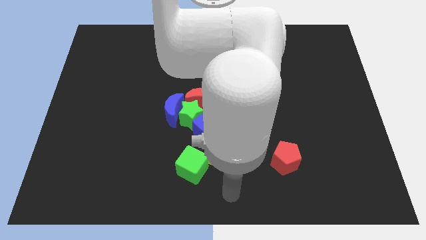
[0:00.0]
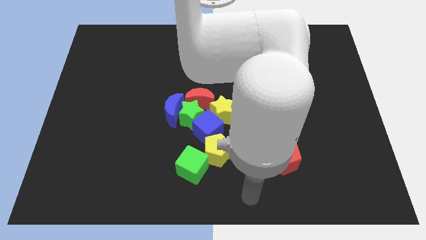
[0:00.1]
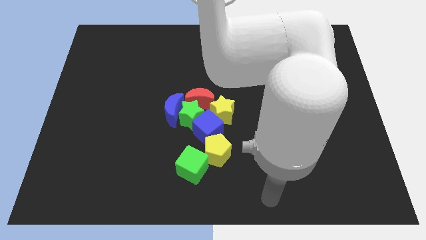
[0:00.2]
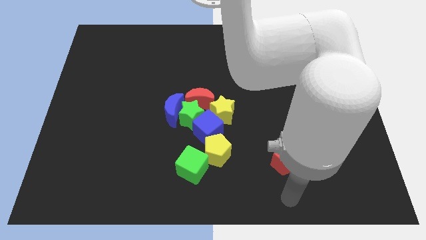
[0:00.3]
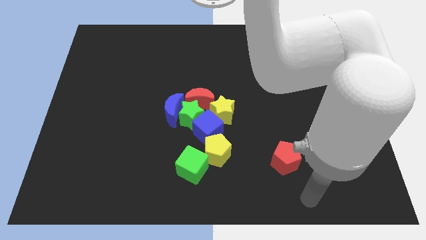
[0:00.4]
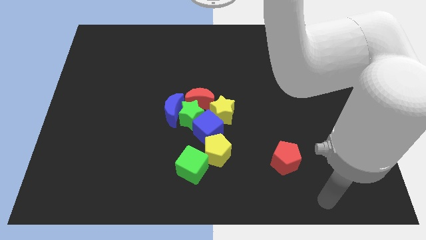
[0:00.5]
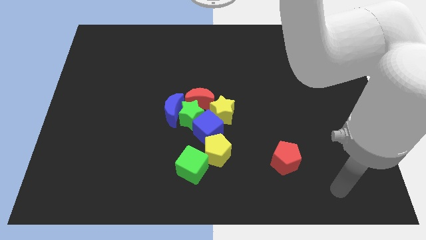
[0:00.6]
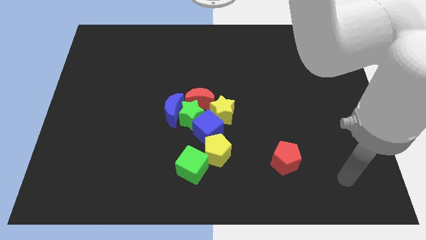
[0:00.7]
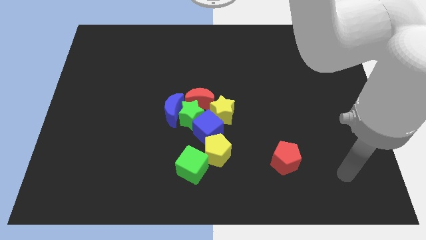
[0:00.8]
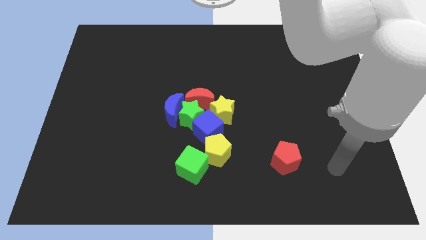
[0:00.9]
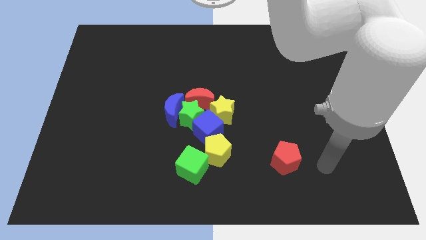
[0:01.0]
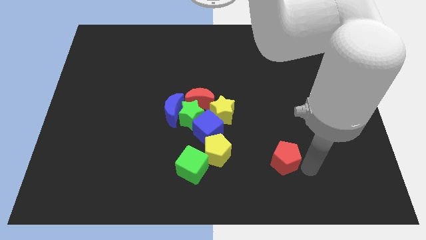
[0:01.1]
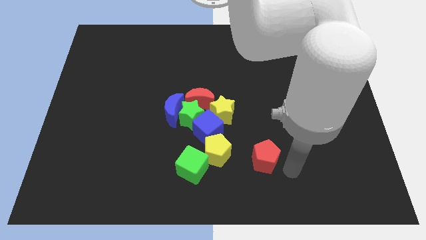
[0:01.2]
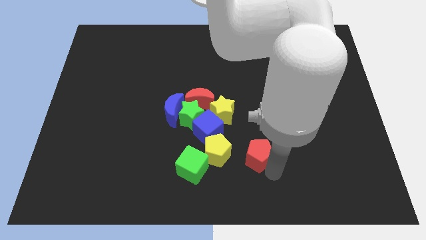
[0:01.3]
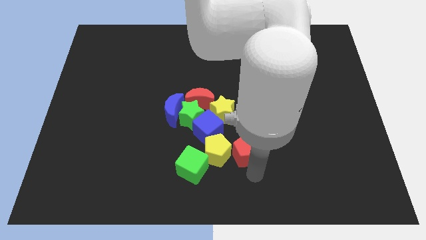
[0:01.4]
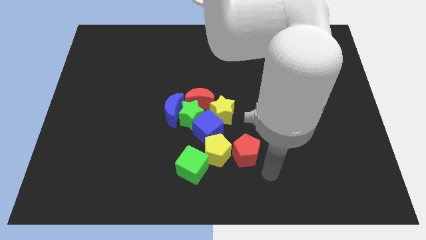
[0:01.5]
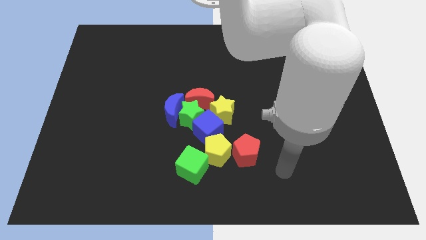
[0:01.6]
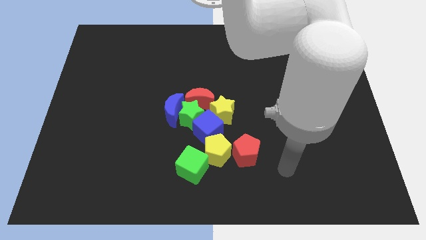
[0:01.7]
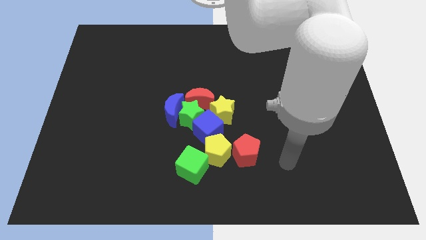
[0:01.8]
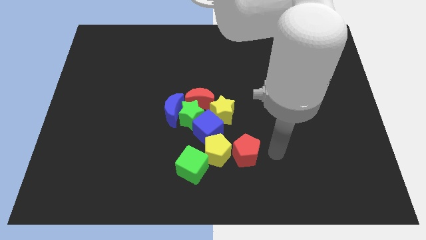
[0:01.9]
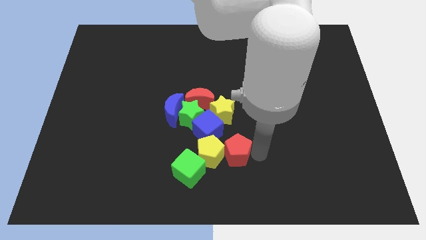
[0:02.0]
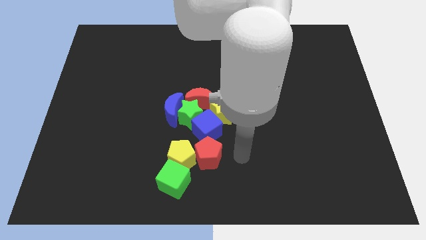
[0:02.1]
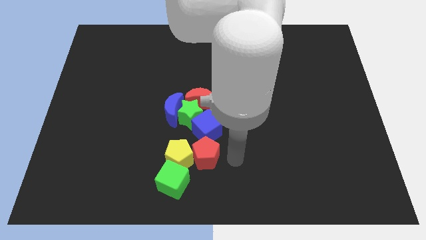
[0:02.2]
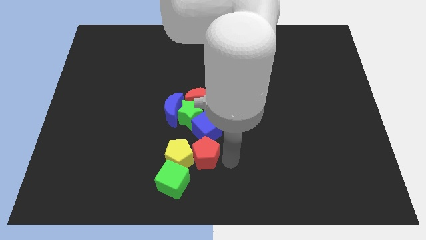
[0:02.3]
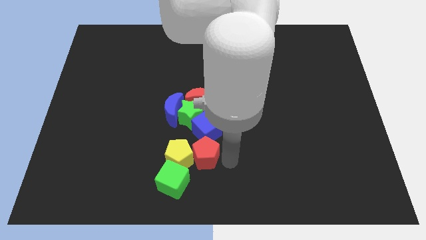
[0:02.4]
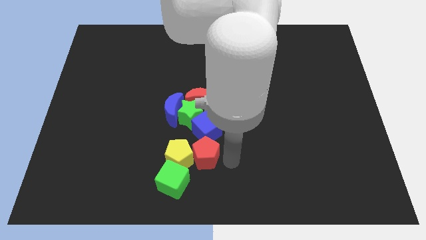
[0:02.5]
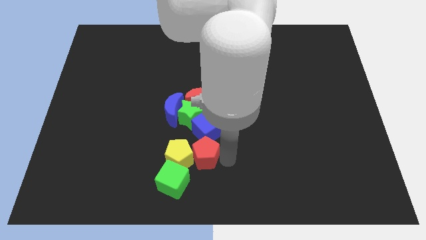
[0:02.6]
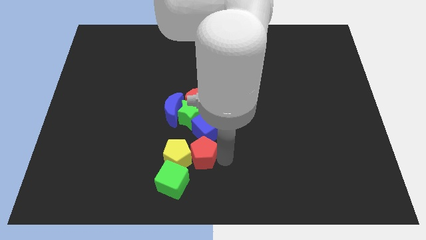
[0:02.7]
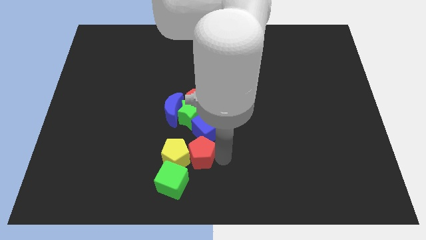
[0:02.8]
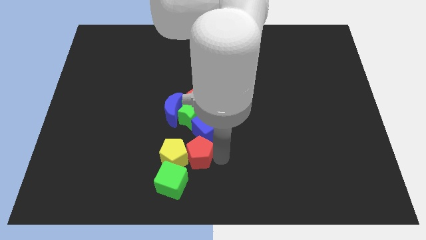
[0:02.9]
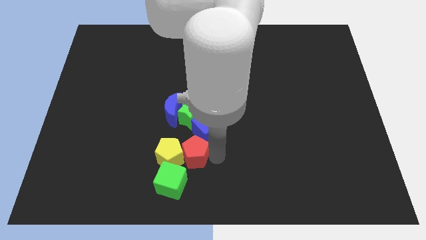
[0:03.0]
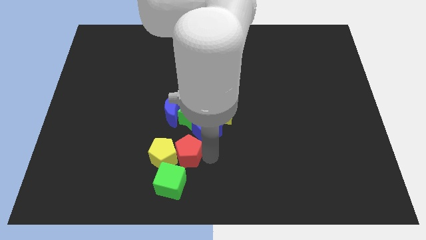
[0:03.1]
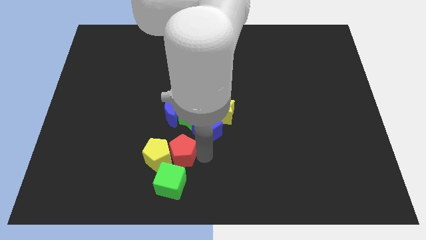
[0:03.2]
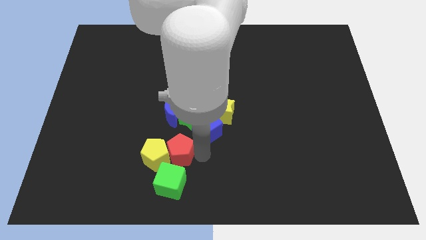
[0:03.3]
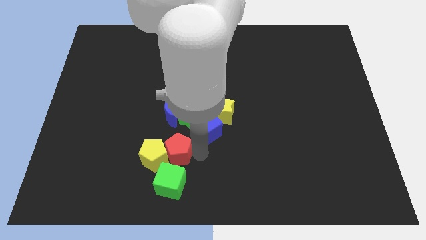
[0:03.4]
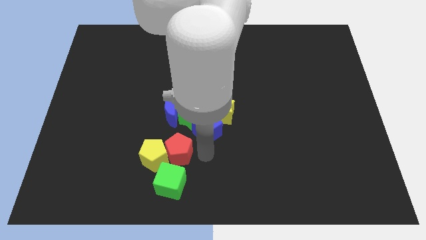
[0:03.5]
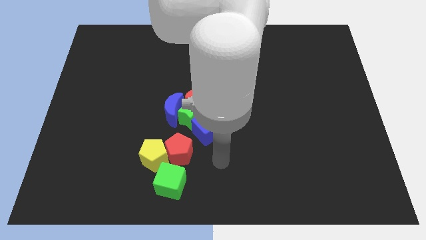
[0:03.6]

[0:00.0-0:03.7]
push the red pentagon into the yellow pentagon

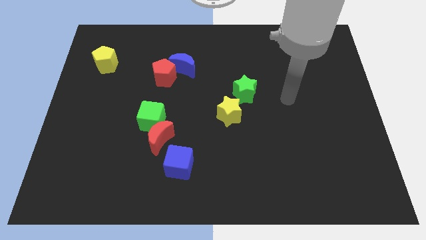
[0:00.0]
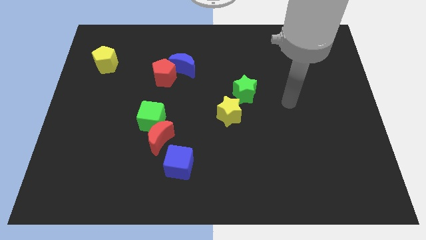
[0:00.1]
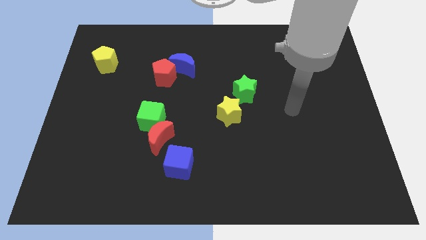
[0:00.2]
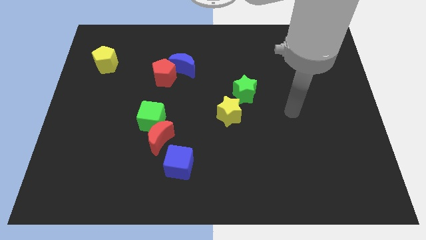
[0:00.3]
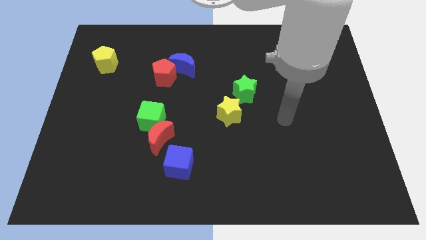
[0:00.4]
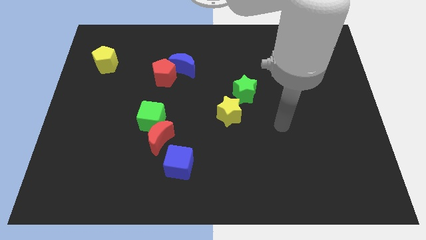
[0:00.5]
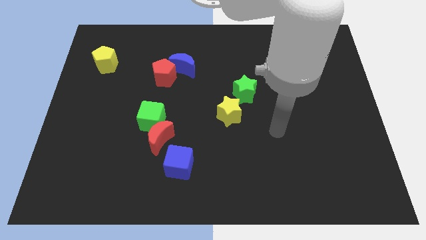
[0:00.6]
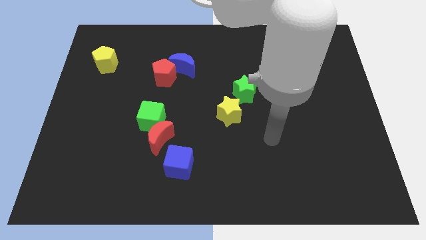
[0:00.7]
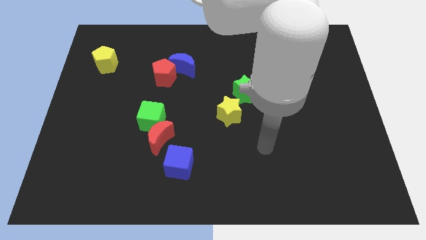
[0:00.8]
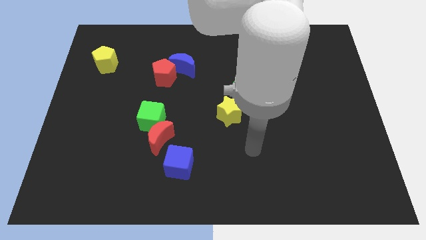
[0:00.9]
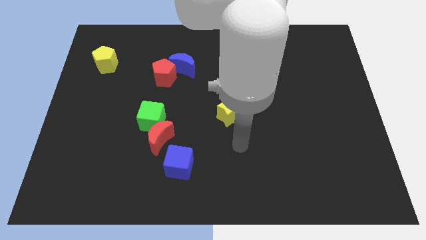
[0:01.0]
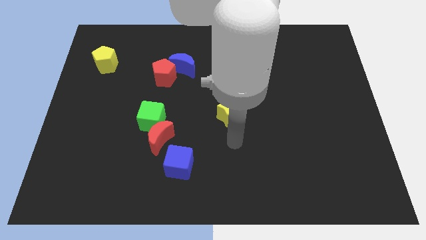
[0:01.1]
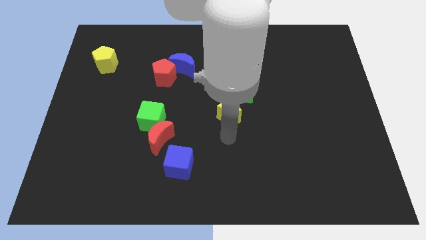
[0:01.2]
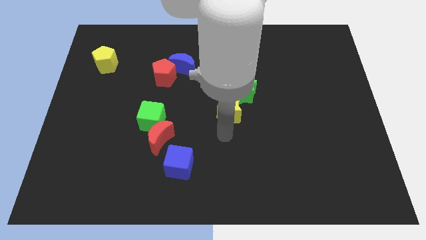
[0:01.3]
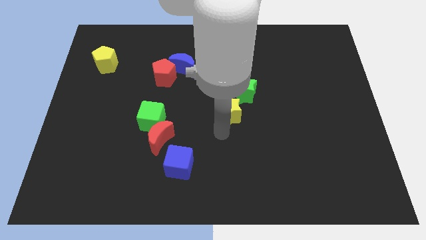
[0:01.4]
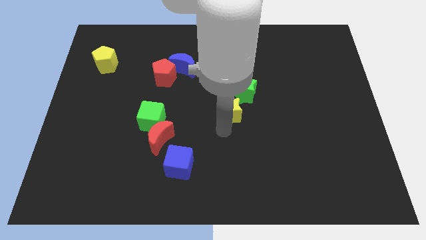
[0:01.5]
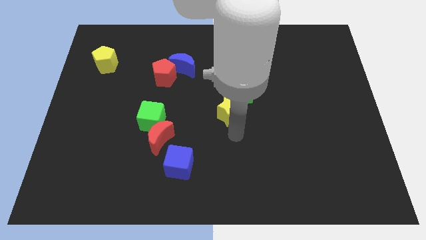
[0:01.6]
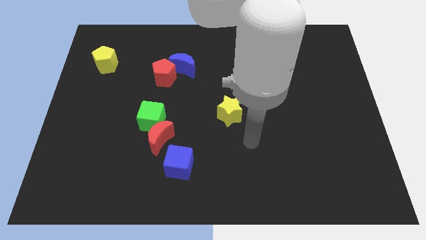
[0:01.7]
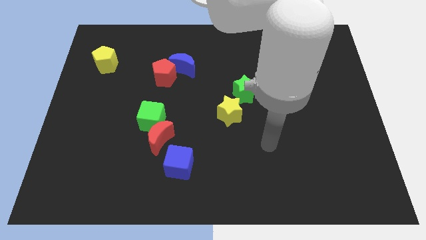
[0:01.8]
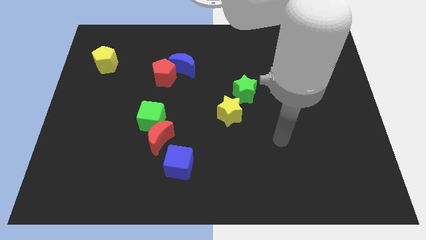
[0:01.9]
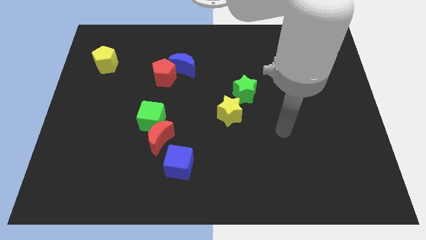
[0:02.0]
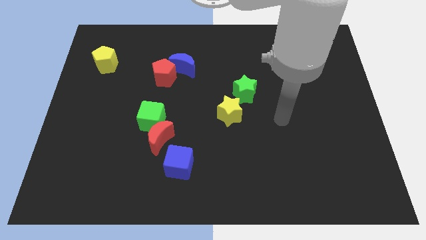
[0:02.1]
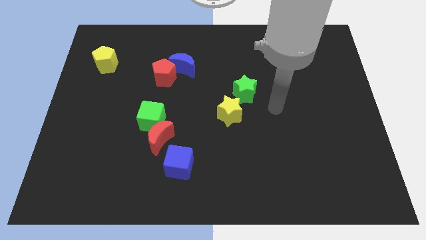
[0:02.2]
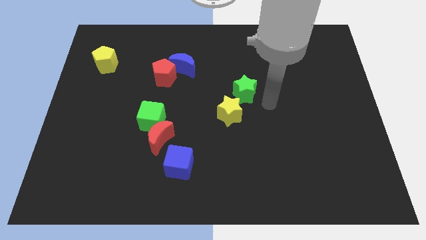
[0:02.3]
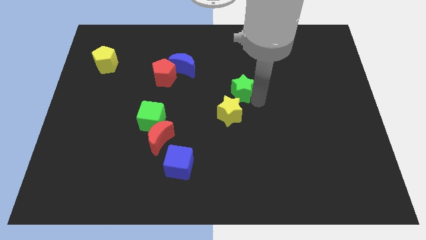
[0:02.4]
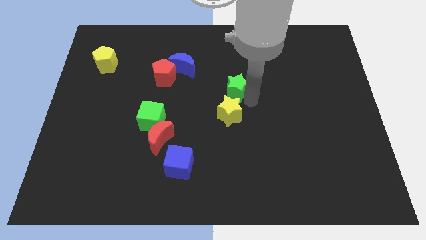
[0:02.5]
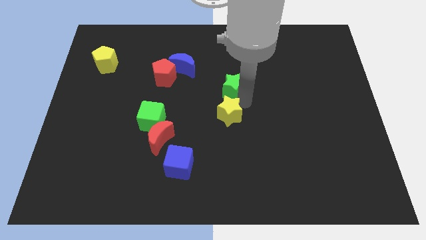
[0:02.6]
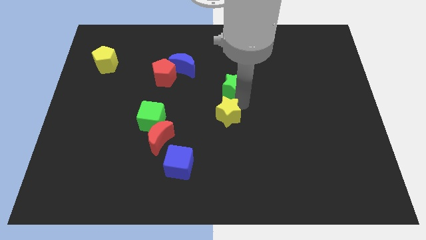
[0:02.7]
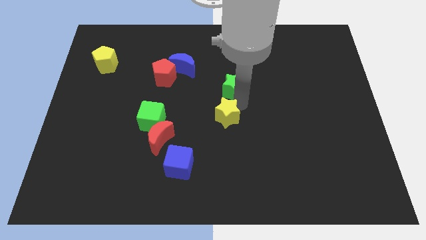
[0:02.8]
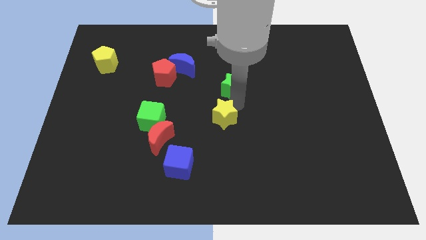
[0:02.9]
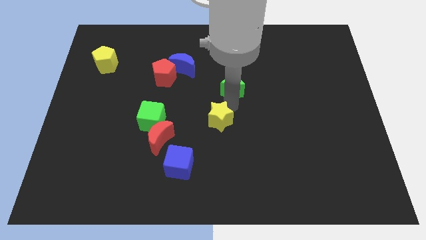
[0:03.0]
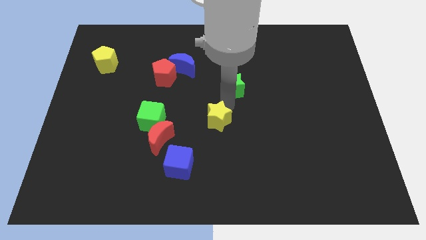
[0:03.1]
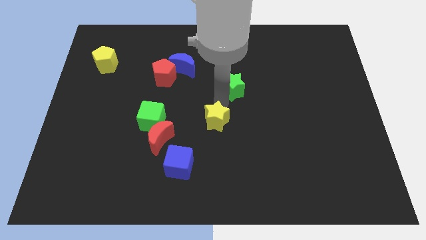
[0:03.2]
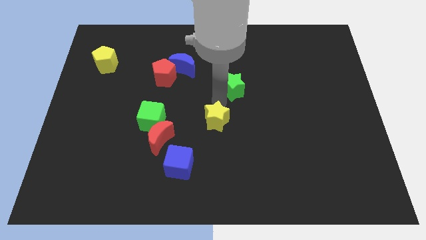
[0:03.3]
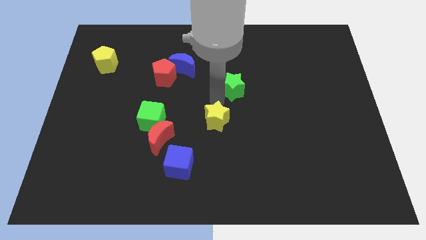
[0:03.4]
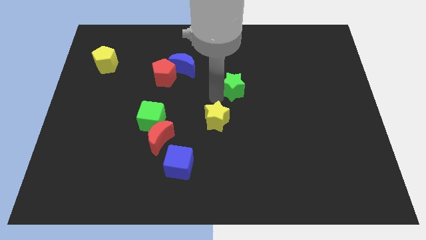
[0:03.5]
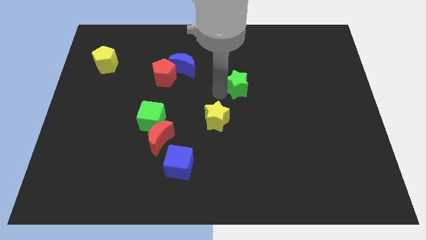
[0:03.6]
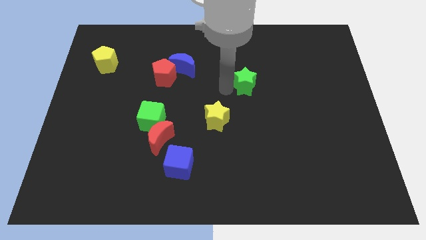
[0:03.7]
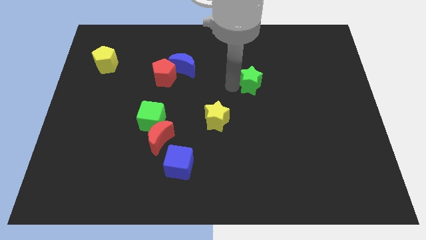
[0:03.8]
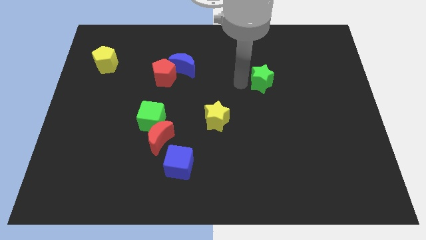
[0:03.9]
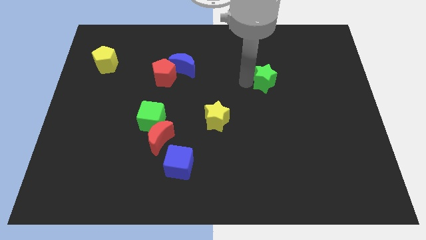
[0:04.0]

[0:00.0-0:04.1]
separate the yellow star and green star

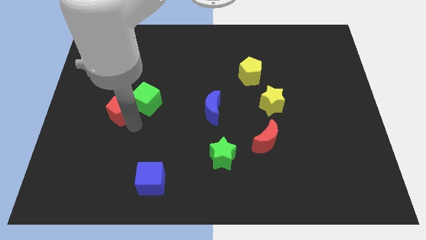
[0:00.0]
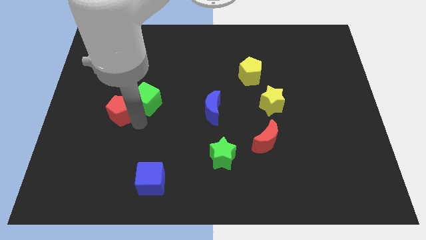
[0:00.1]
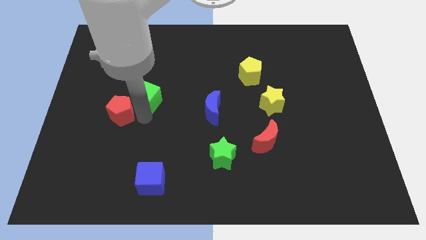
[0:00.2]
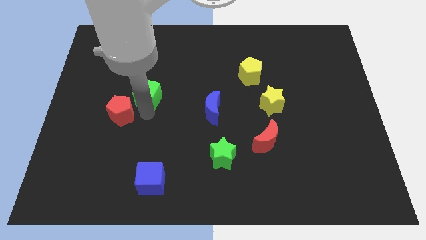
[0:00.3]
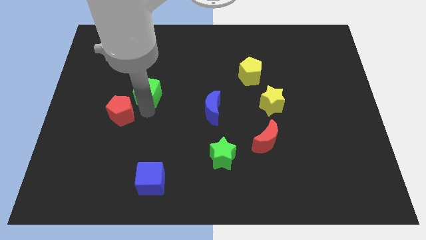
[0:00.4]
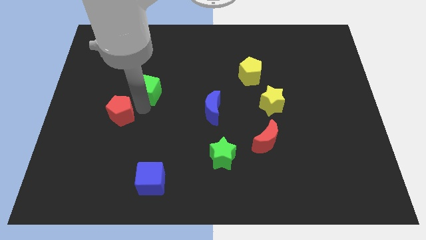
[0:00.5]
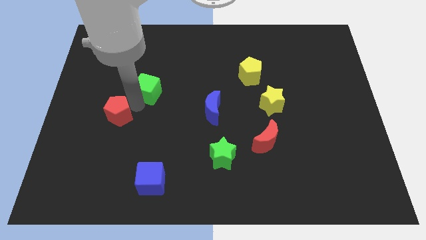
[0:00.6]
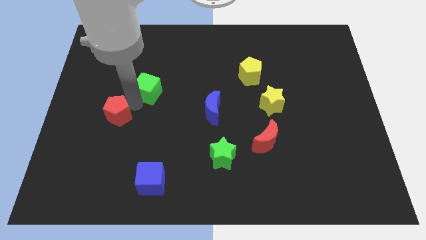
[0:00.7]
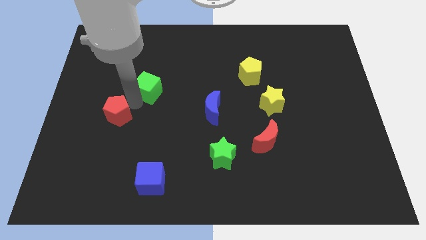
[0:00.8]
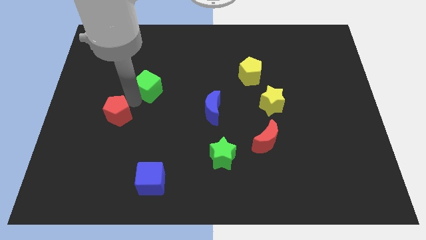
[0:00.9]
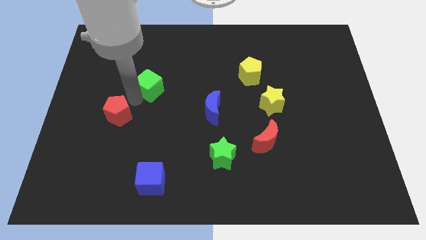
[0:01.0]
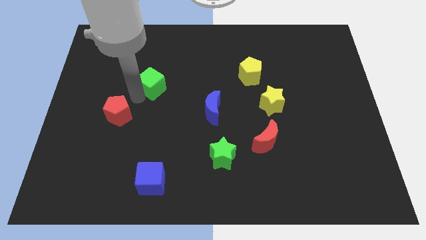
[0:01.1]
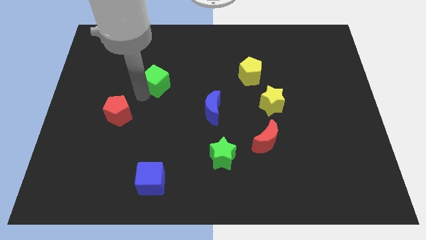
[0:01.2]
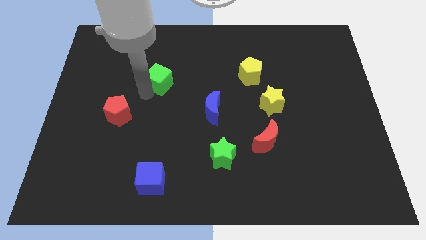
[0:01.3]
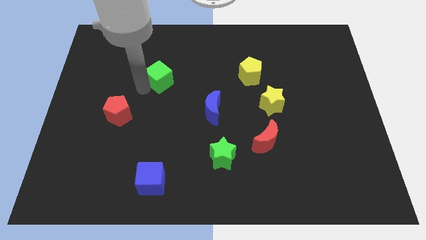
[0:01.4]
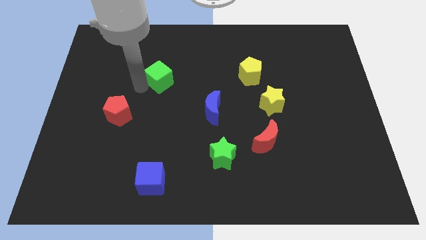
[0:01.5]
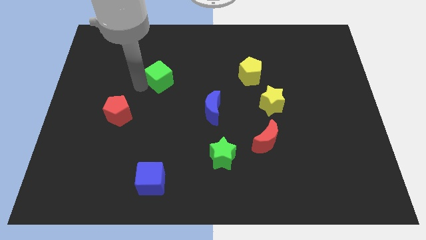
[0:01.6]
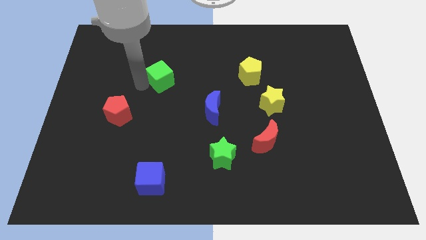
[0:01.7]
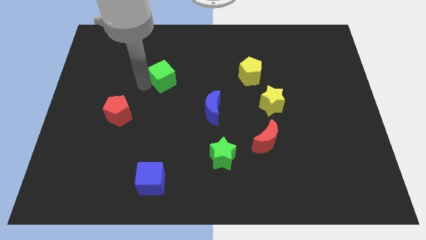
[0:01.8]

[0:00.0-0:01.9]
separate the green cube from the red pentagon
